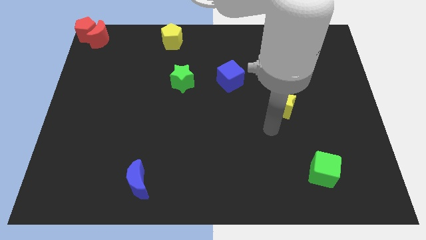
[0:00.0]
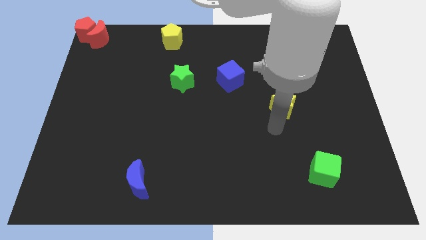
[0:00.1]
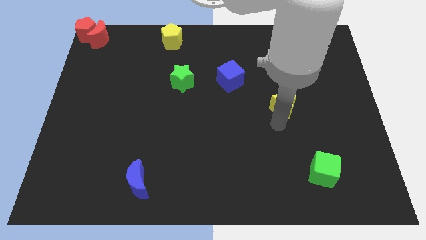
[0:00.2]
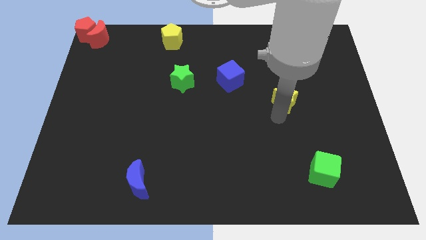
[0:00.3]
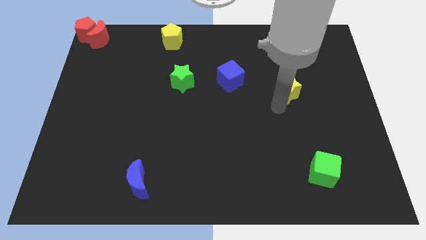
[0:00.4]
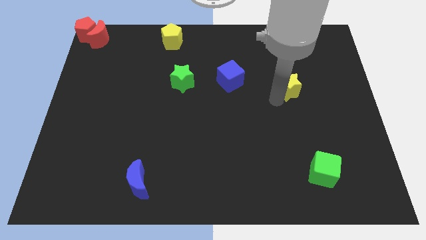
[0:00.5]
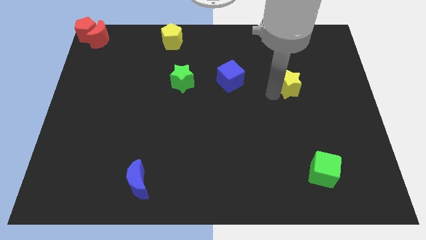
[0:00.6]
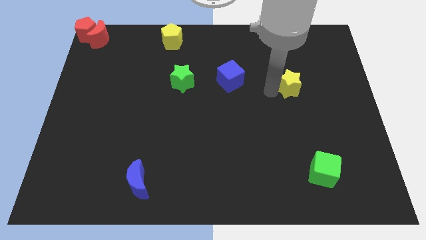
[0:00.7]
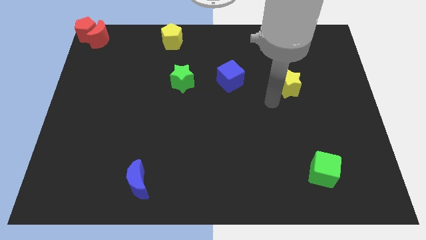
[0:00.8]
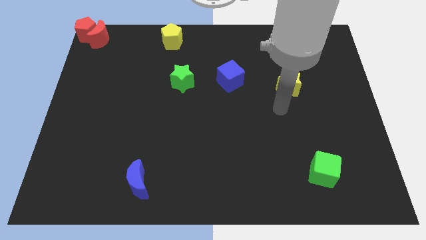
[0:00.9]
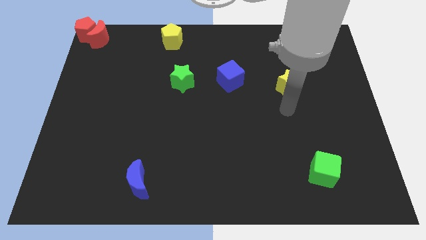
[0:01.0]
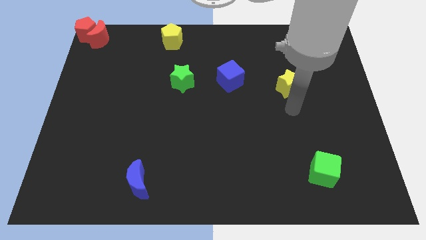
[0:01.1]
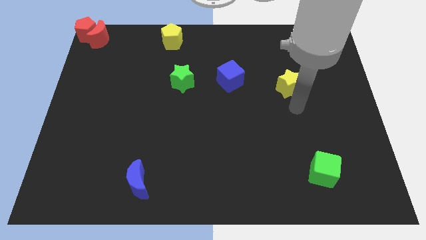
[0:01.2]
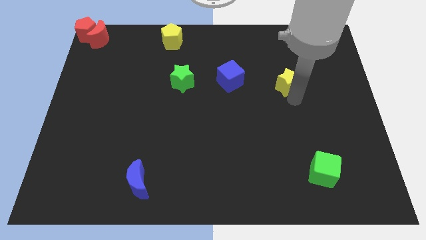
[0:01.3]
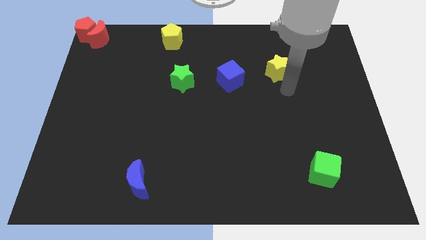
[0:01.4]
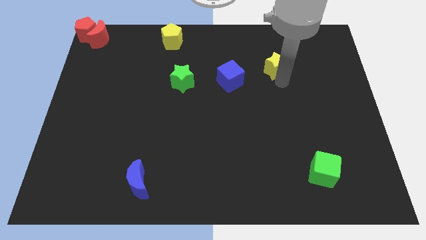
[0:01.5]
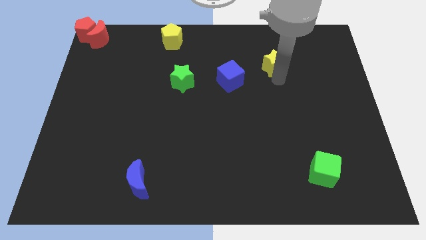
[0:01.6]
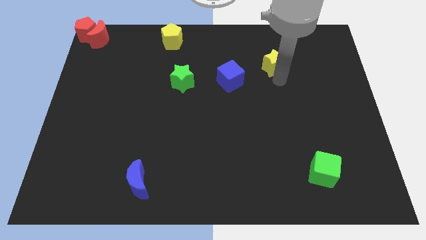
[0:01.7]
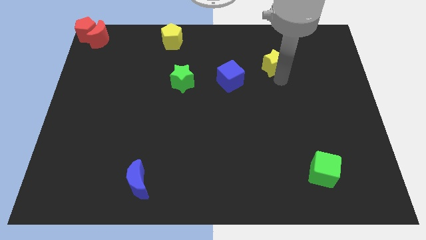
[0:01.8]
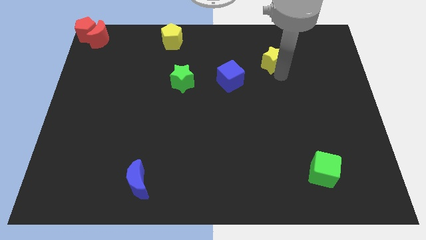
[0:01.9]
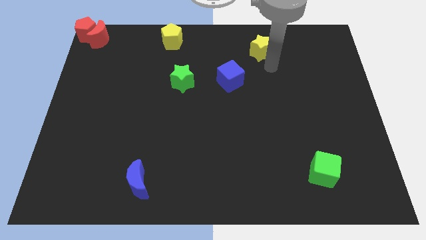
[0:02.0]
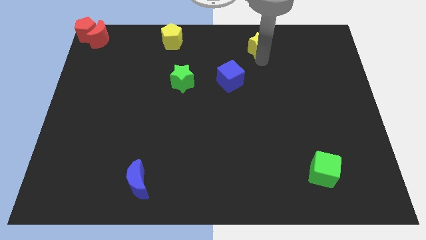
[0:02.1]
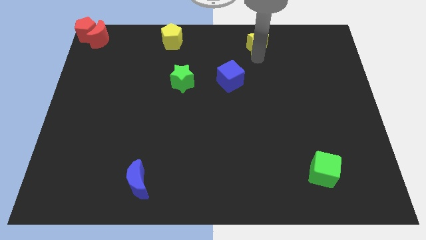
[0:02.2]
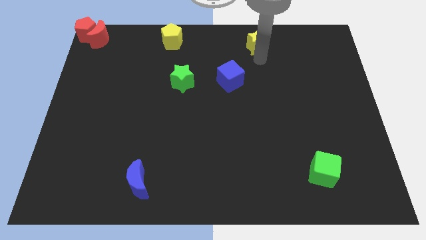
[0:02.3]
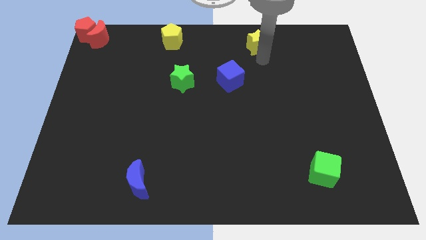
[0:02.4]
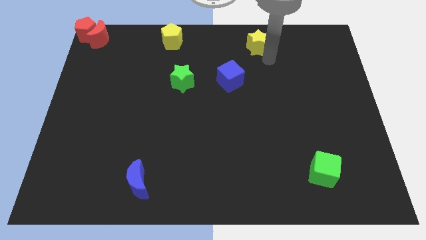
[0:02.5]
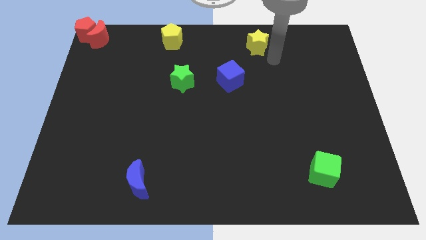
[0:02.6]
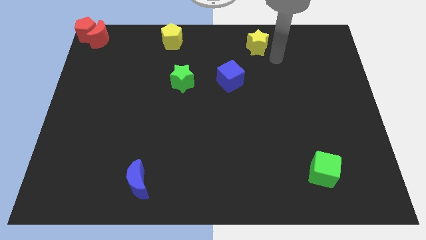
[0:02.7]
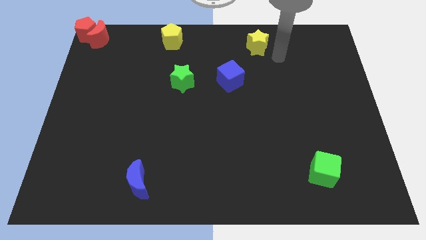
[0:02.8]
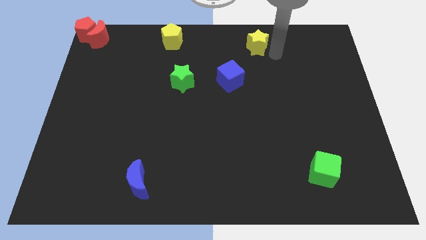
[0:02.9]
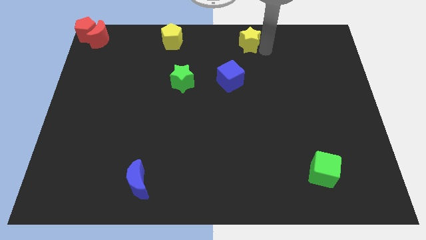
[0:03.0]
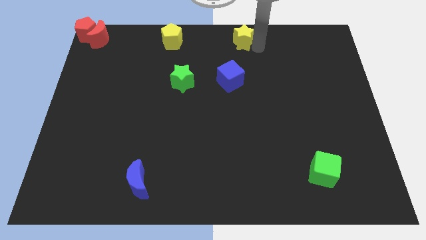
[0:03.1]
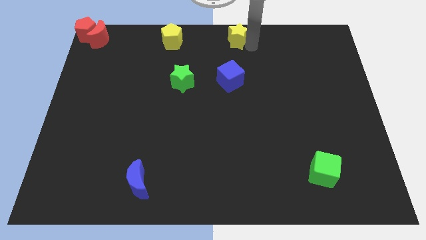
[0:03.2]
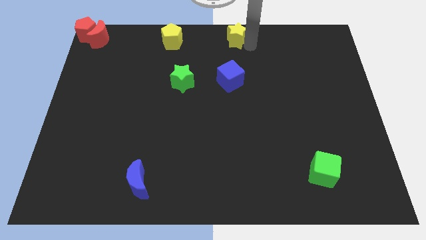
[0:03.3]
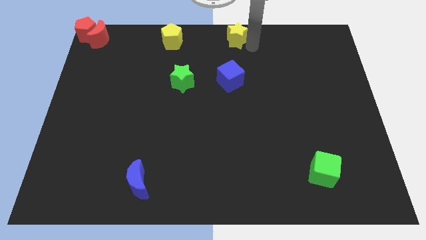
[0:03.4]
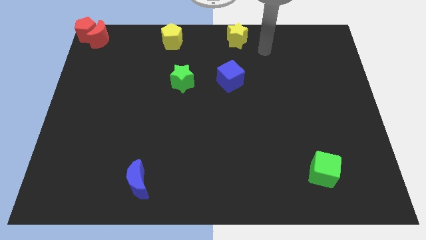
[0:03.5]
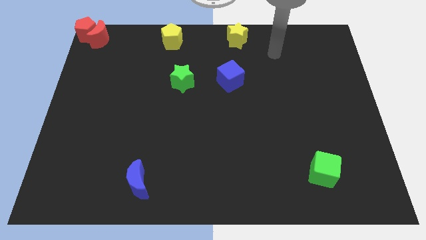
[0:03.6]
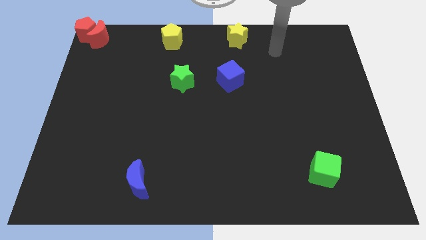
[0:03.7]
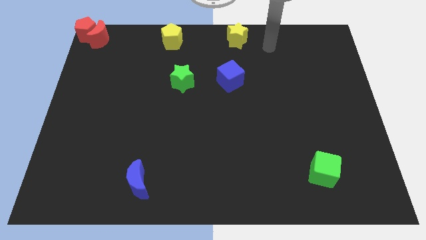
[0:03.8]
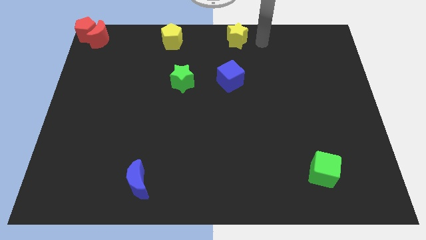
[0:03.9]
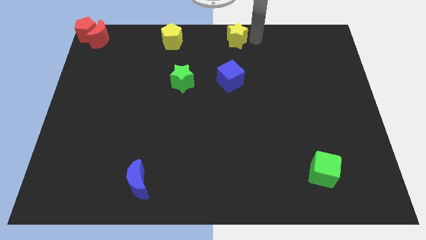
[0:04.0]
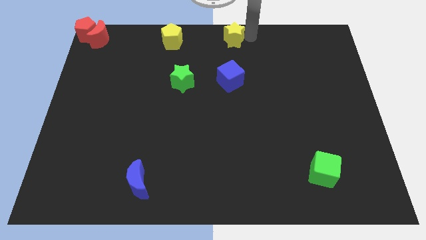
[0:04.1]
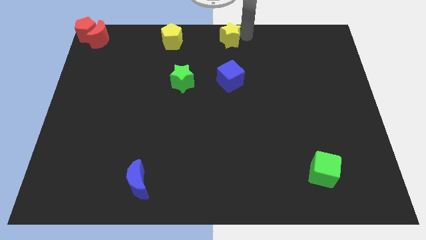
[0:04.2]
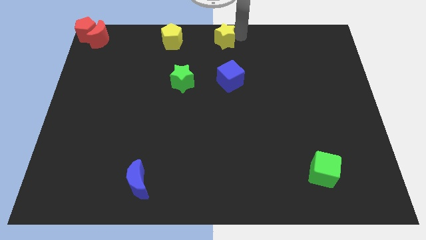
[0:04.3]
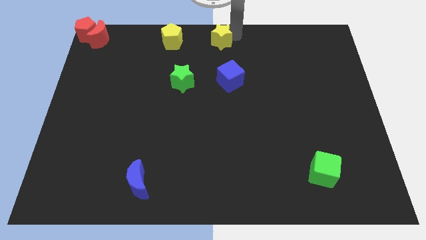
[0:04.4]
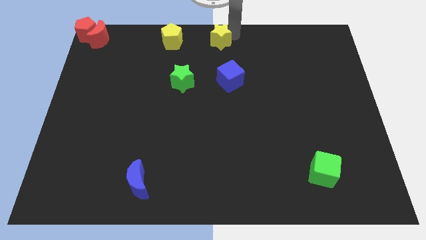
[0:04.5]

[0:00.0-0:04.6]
move the yellow star to the top center of the board

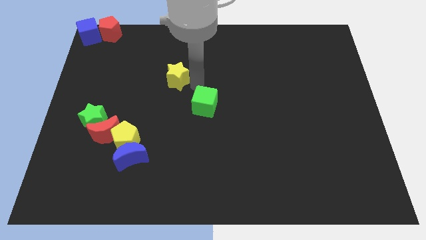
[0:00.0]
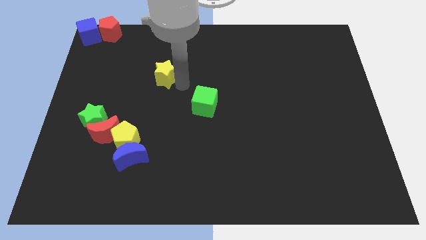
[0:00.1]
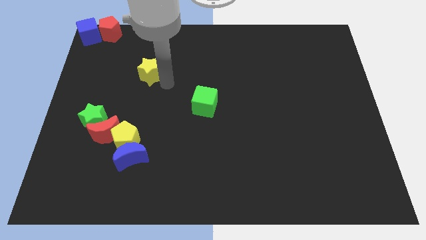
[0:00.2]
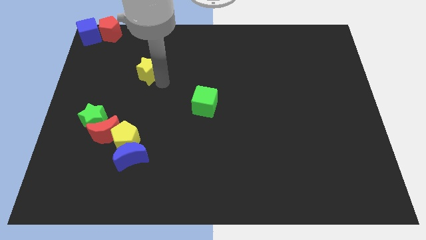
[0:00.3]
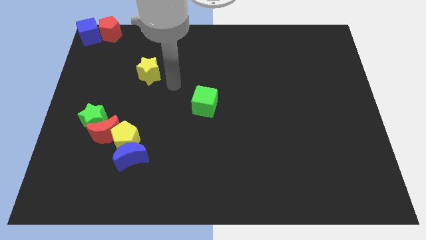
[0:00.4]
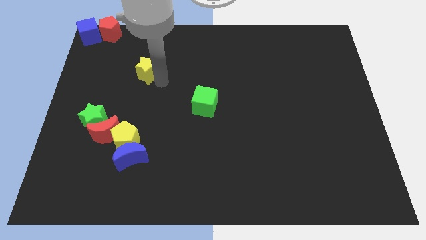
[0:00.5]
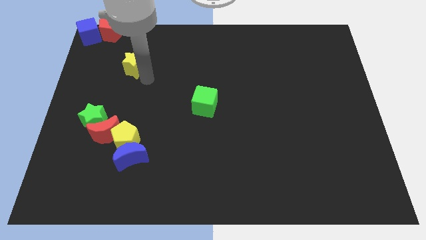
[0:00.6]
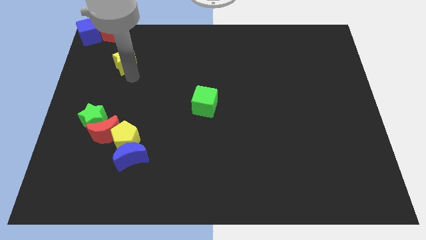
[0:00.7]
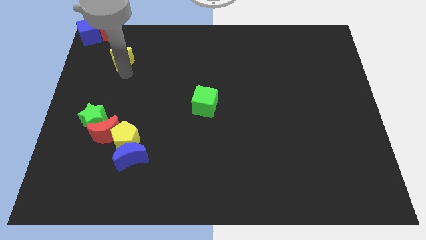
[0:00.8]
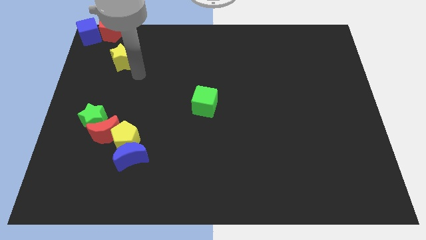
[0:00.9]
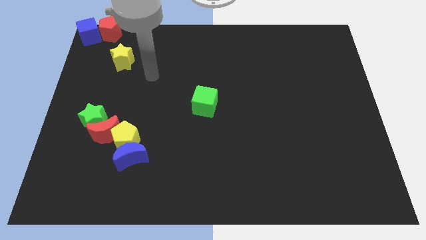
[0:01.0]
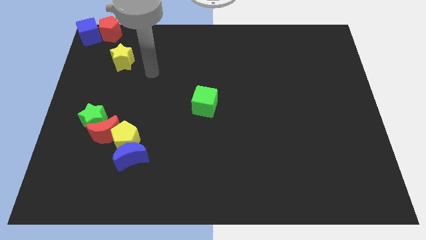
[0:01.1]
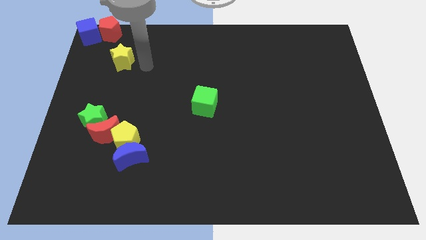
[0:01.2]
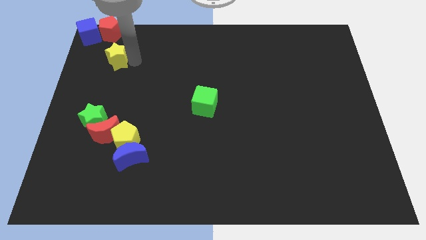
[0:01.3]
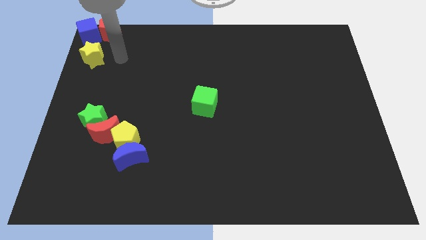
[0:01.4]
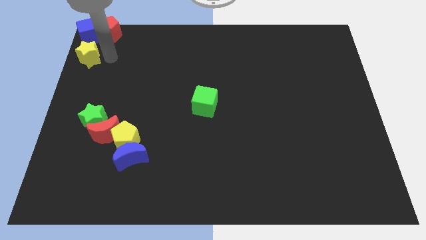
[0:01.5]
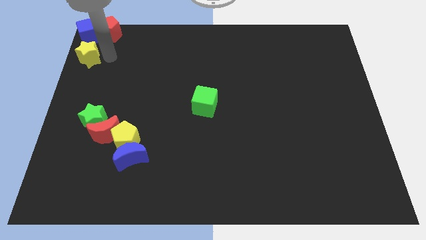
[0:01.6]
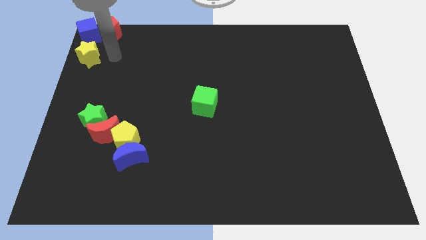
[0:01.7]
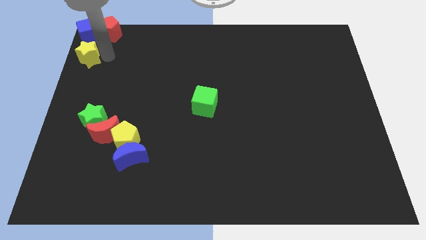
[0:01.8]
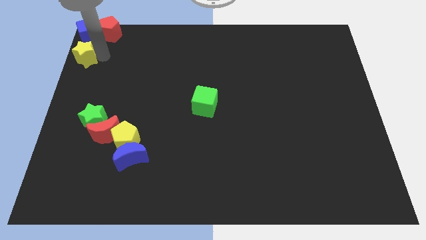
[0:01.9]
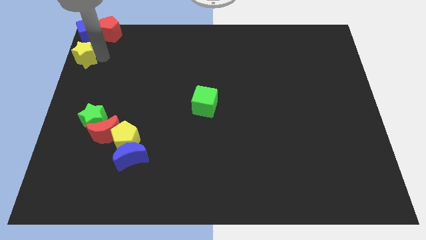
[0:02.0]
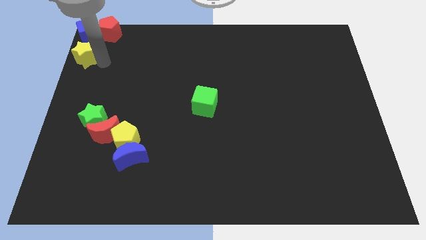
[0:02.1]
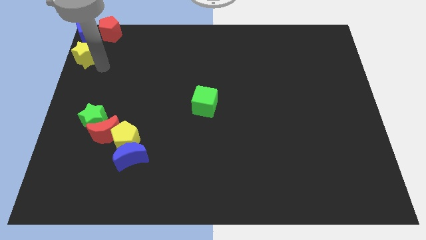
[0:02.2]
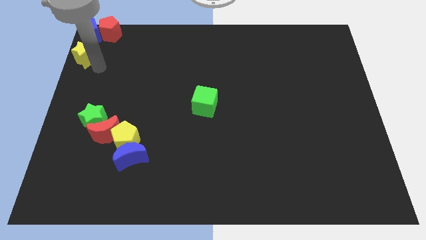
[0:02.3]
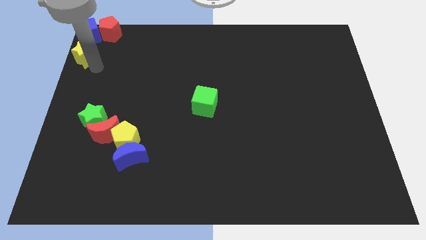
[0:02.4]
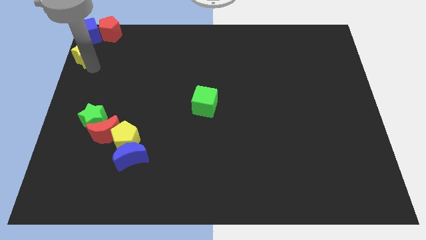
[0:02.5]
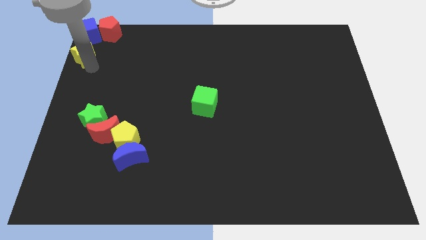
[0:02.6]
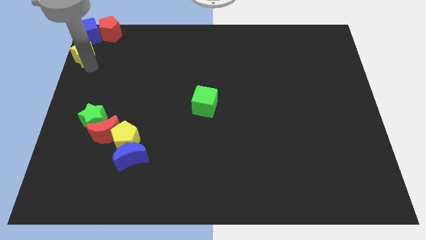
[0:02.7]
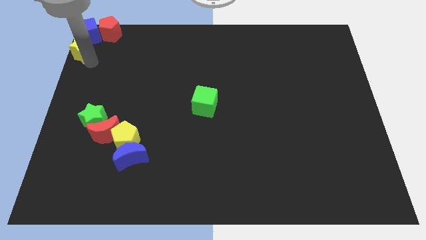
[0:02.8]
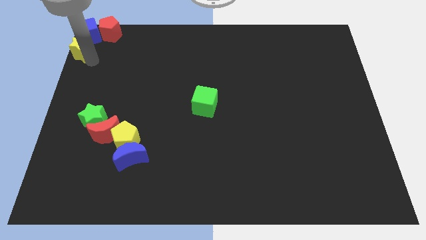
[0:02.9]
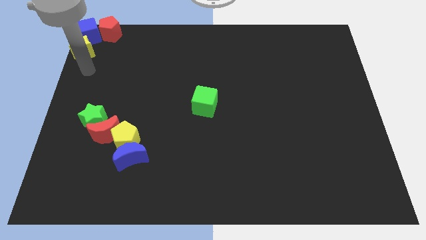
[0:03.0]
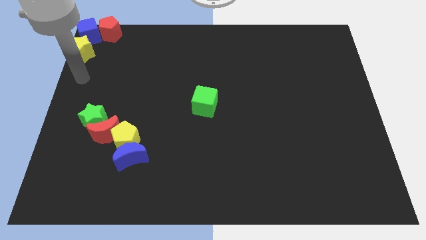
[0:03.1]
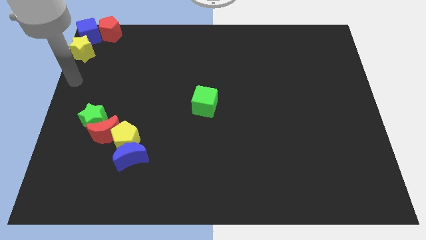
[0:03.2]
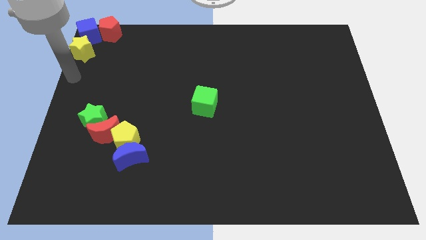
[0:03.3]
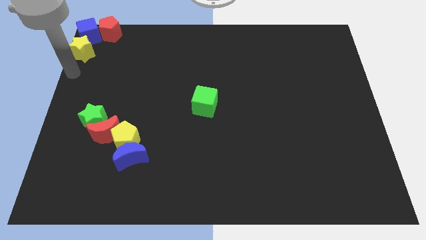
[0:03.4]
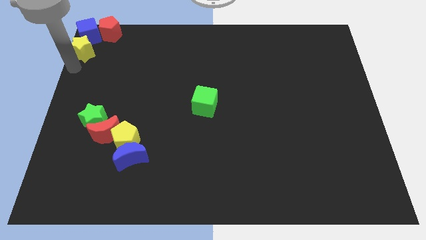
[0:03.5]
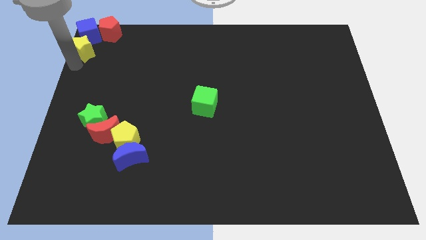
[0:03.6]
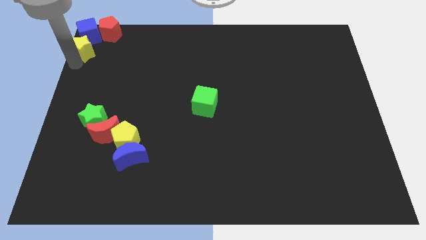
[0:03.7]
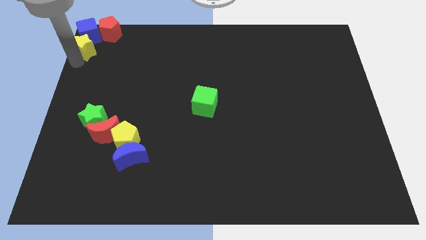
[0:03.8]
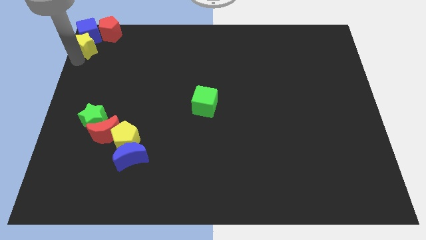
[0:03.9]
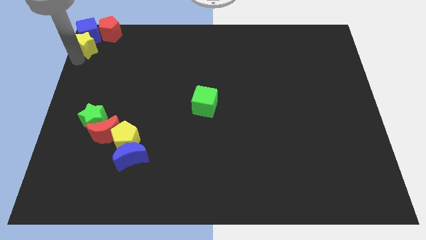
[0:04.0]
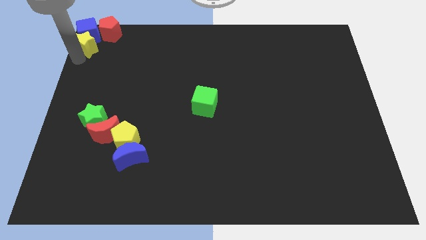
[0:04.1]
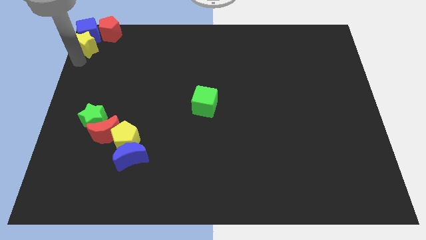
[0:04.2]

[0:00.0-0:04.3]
move the yellow star into the bottom side of the blue cube
